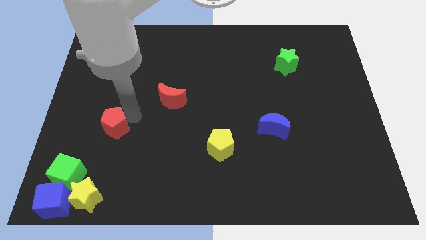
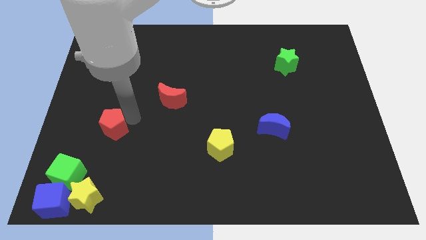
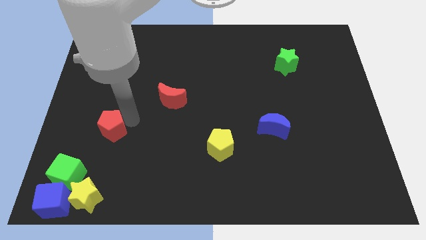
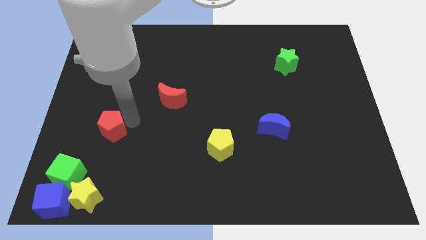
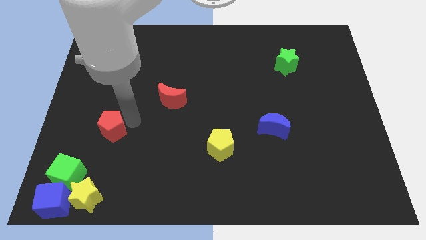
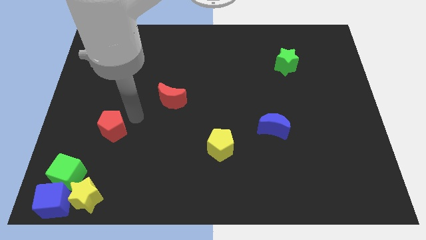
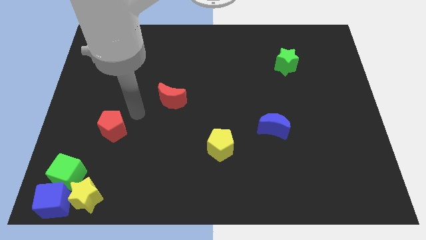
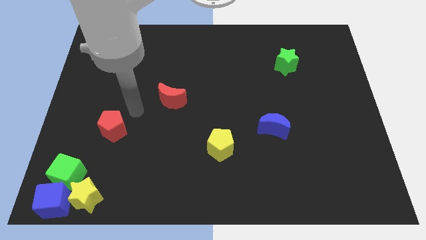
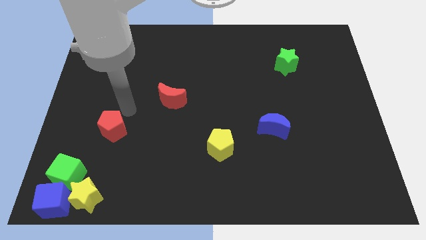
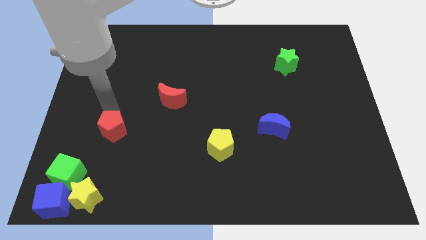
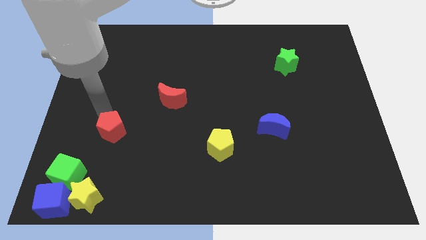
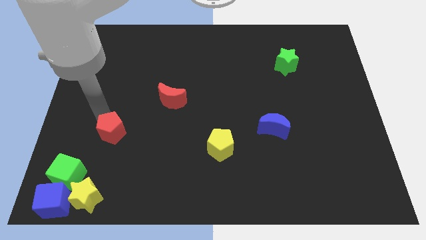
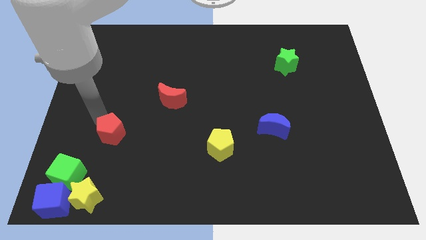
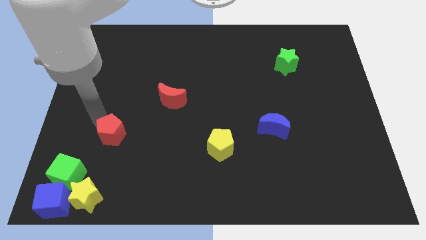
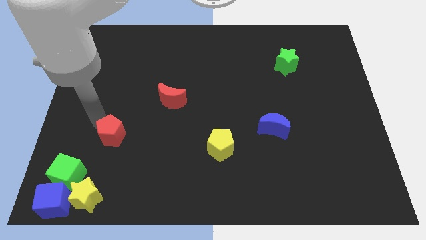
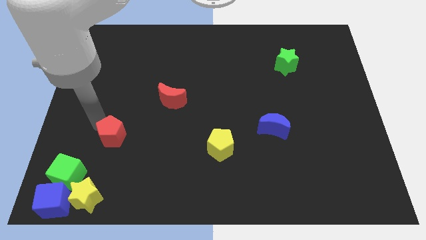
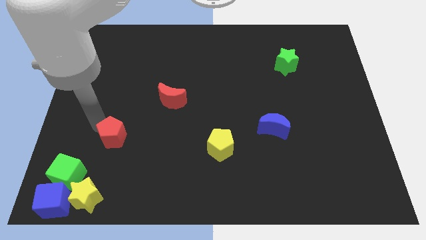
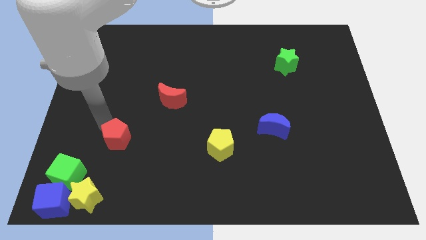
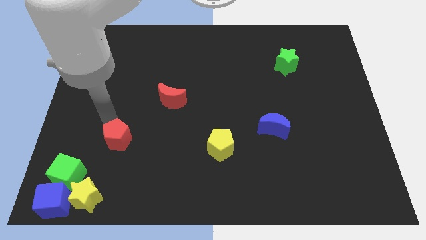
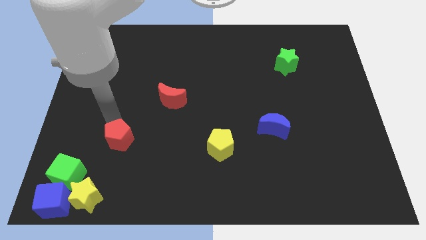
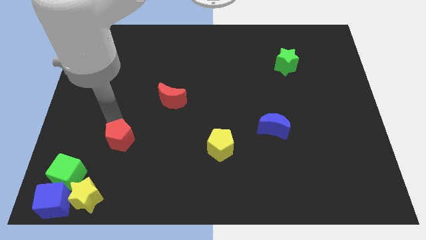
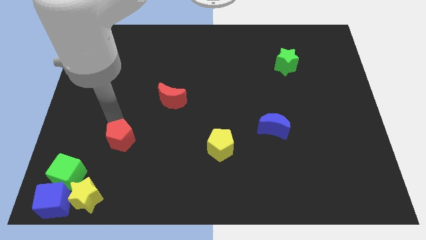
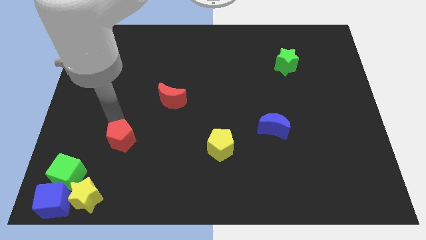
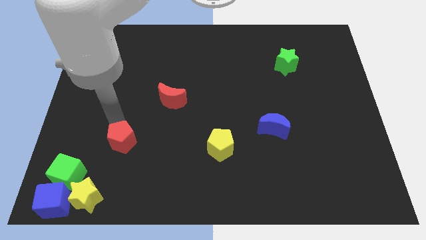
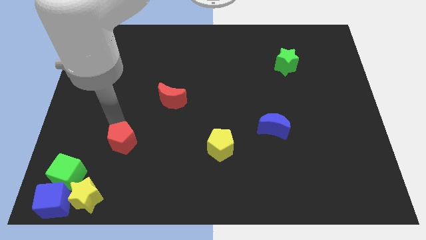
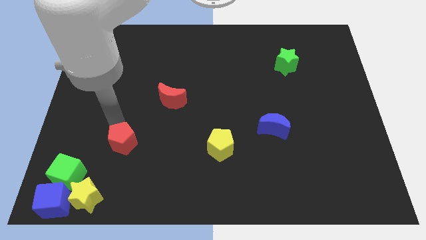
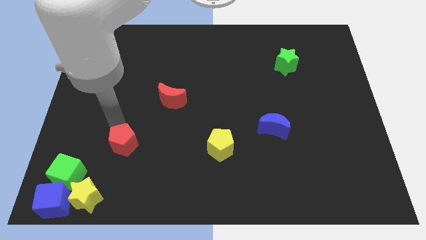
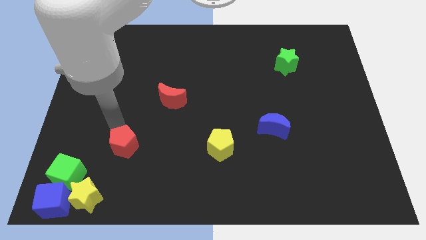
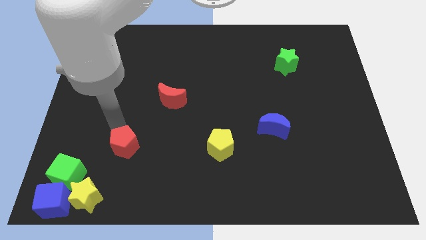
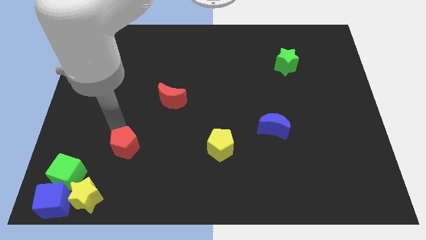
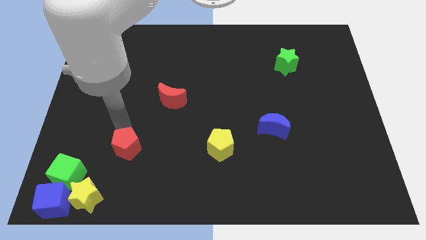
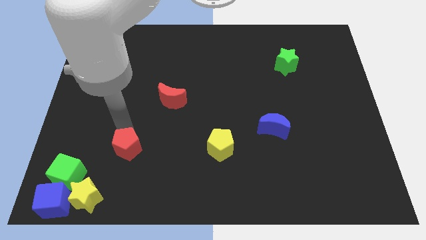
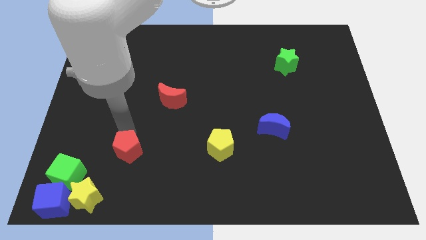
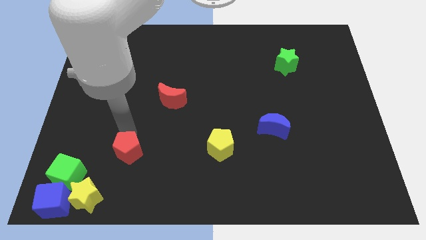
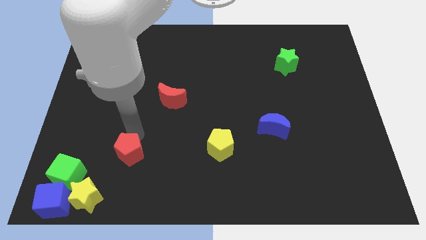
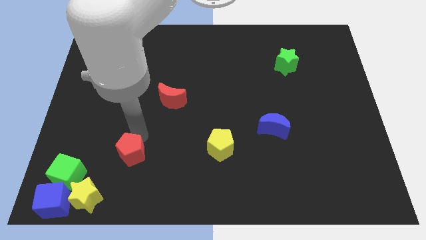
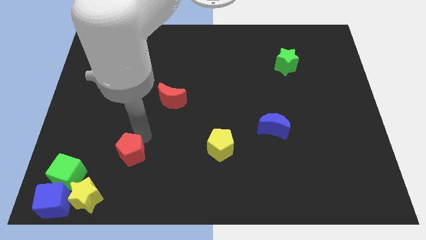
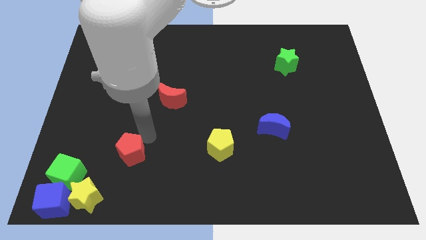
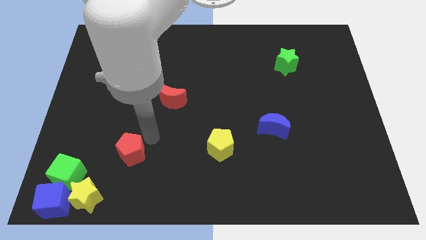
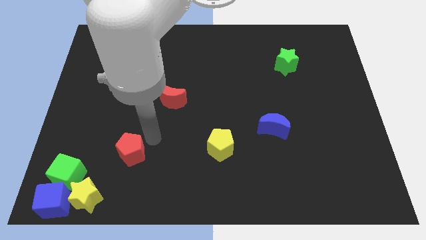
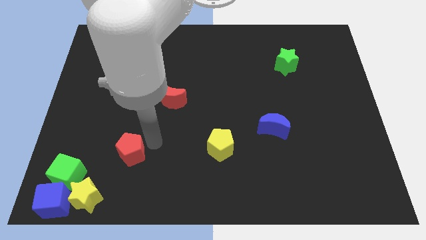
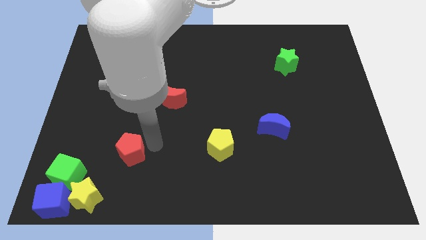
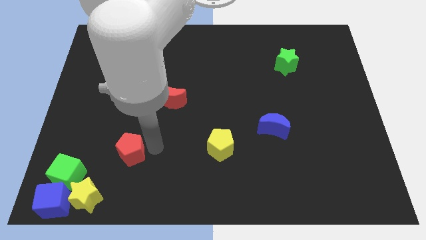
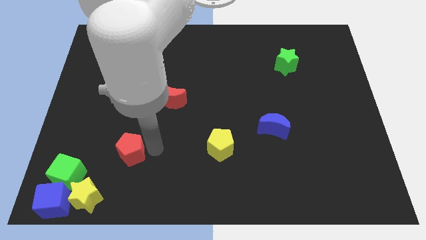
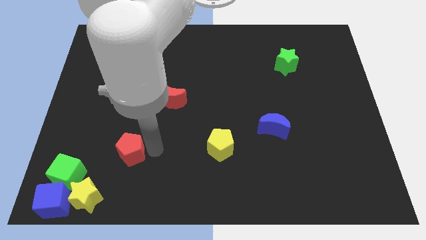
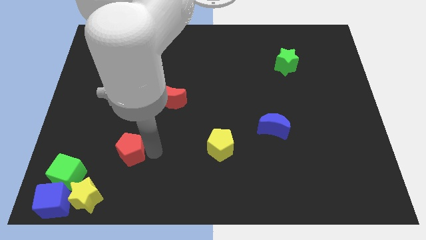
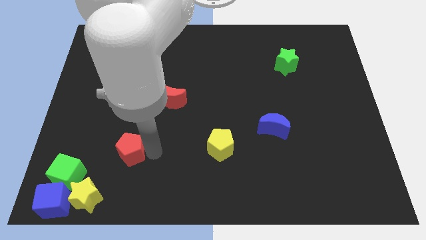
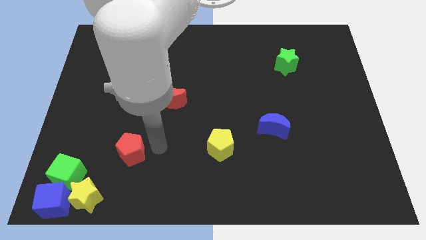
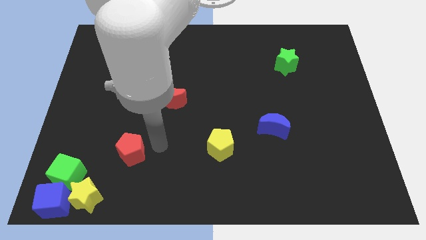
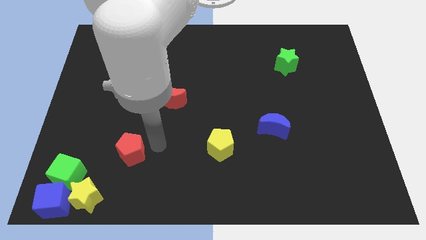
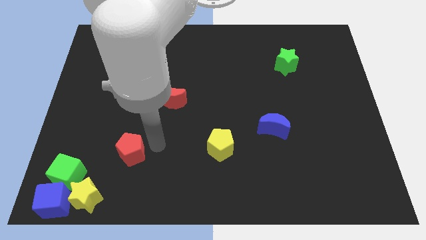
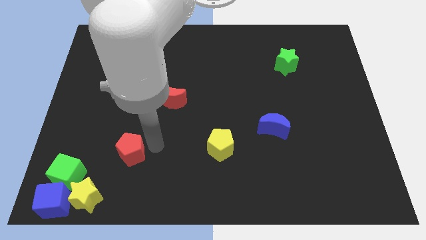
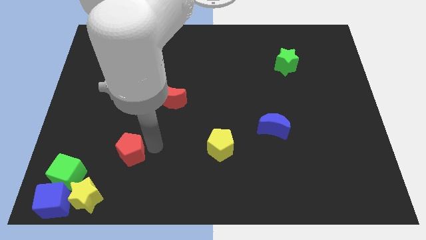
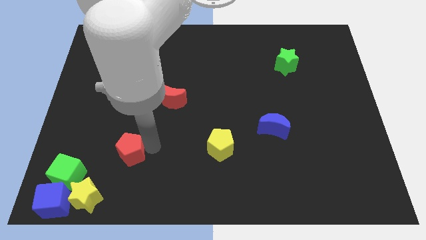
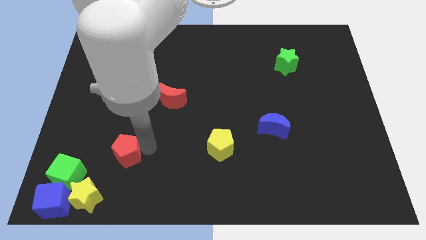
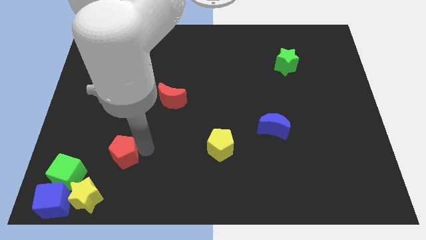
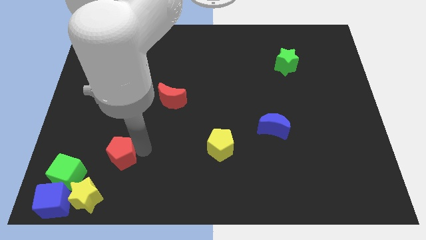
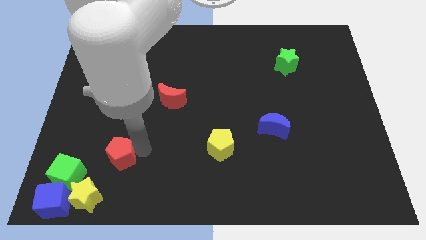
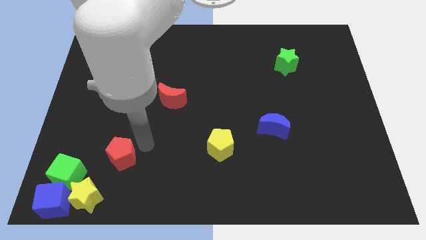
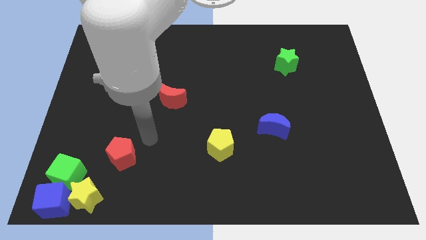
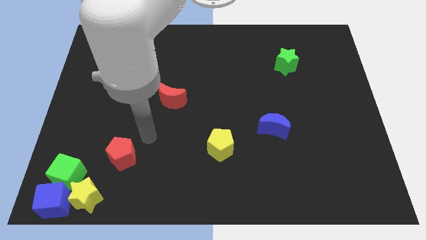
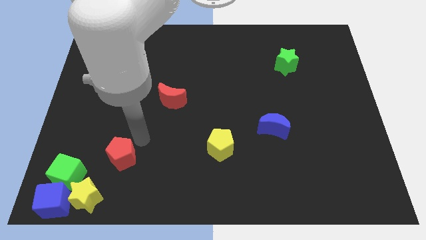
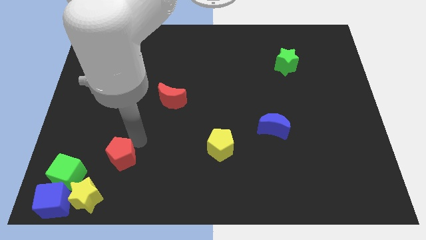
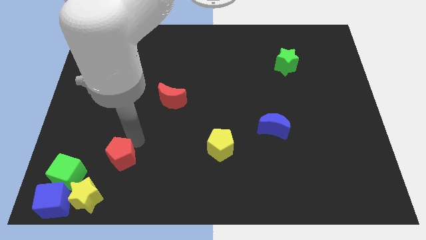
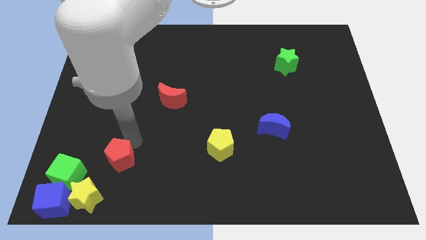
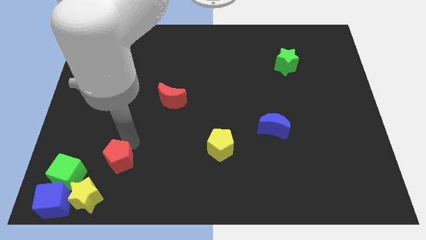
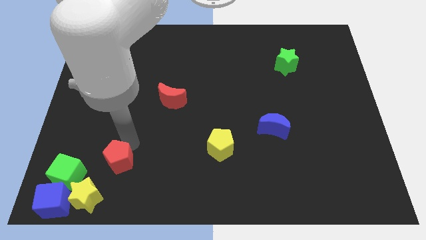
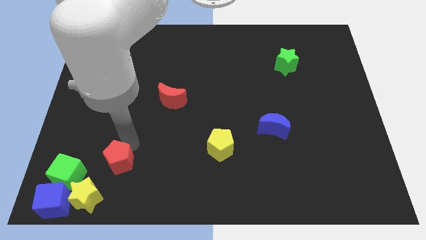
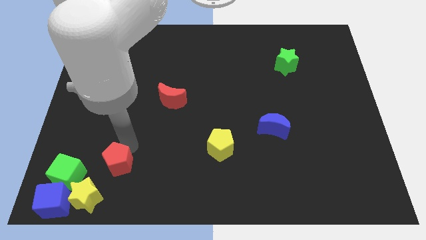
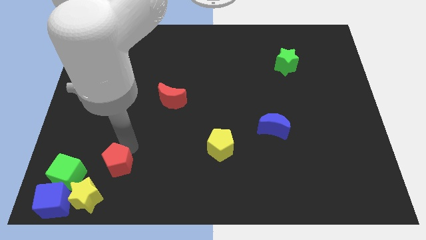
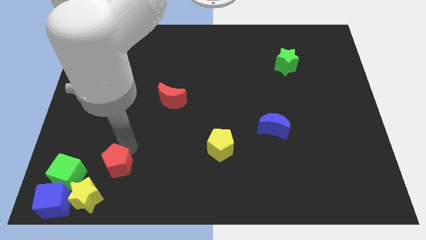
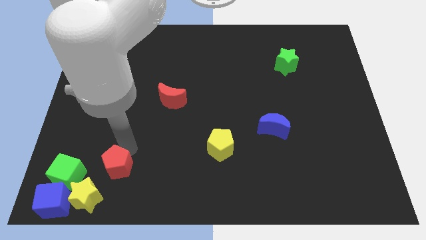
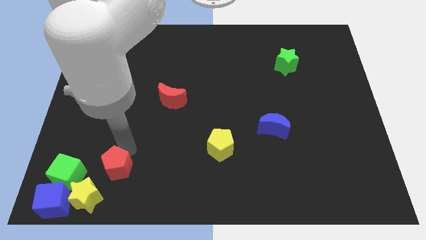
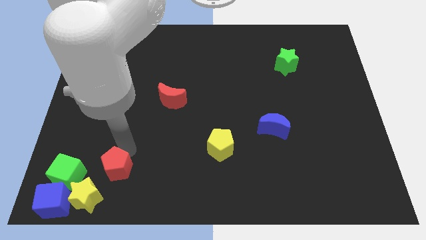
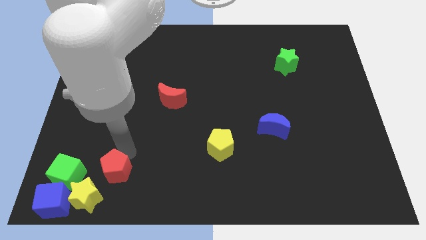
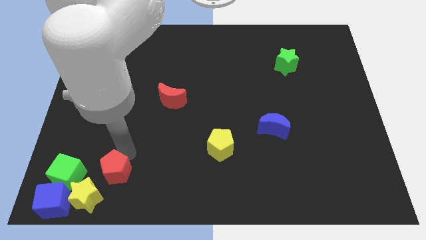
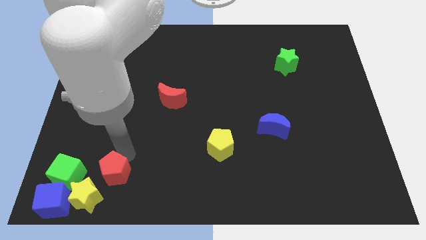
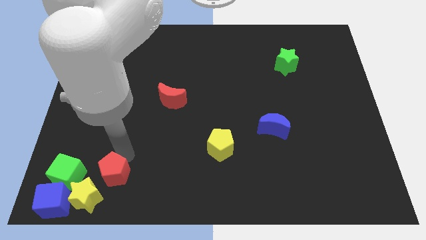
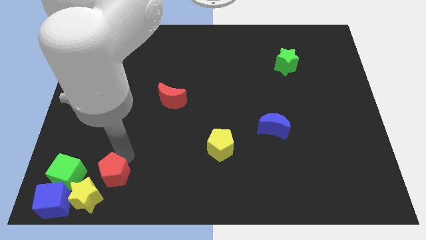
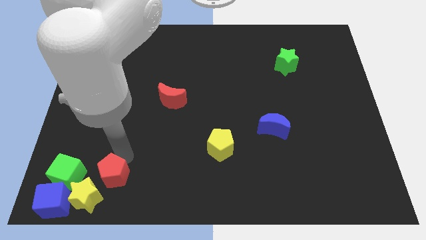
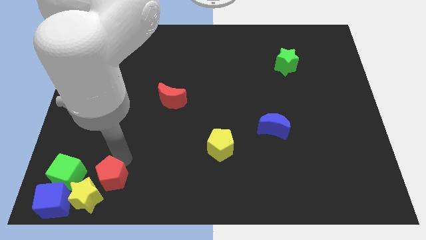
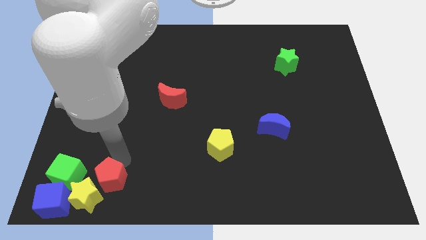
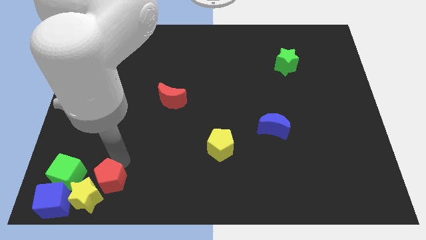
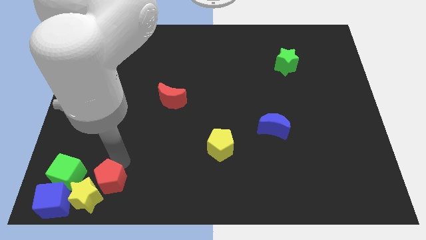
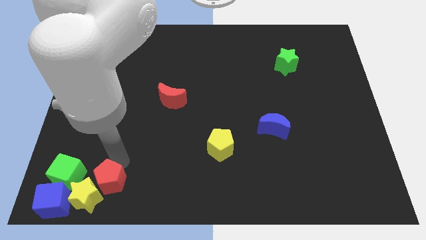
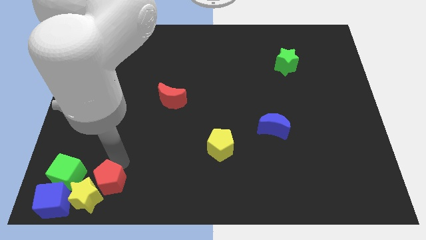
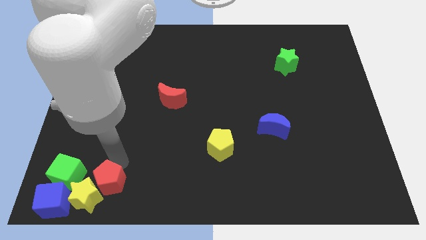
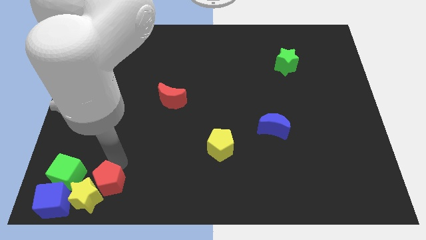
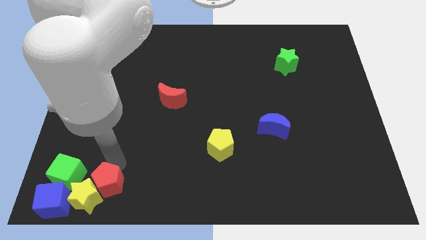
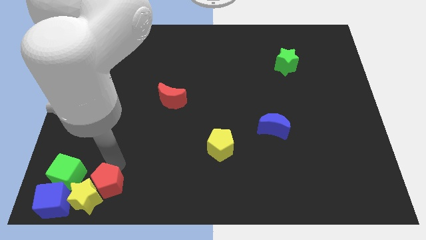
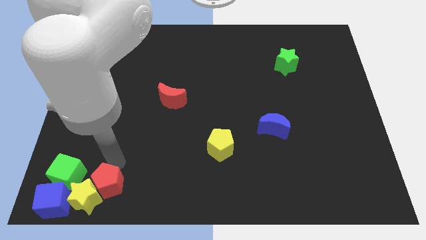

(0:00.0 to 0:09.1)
put the red pentagon and yellow star together
